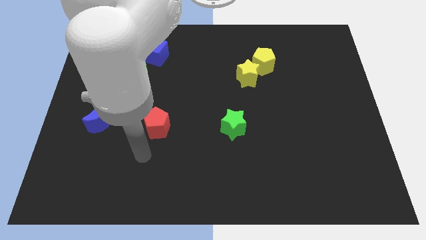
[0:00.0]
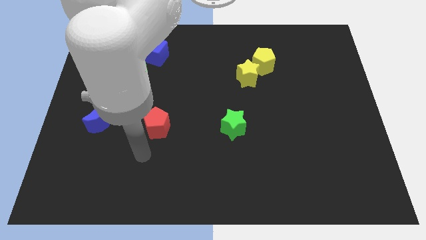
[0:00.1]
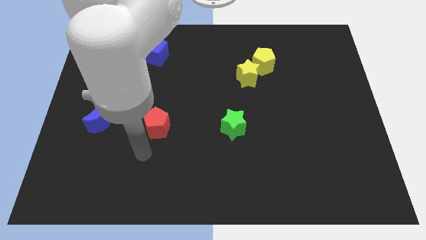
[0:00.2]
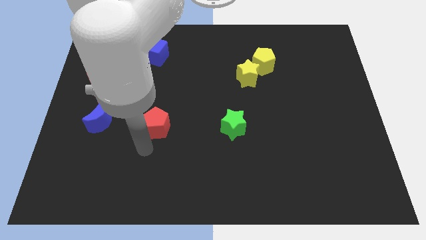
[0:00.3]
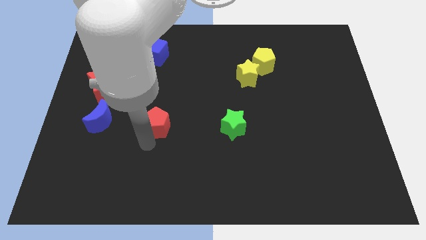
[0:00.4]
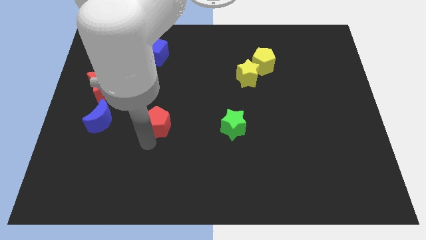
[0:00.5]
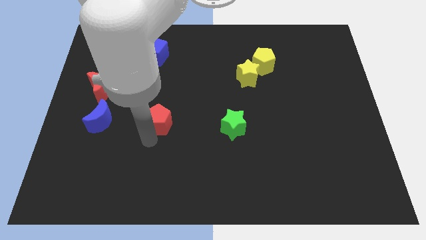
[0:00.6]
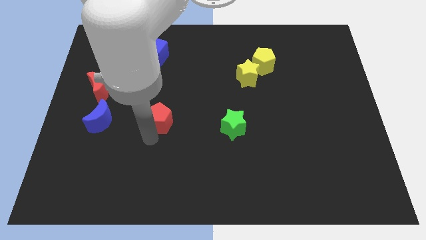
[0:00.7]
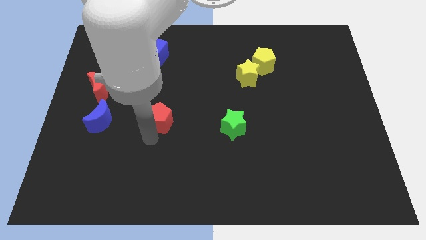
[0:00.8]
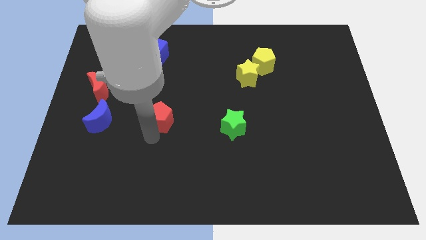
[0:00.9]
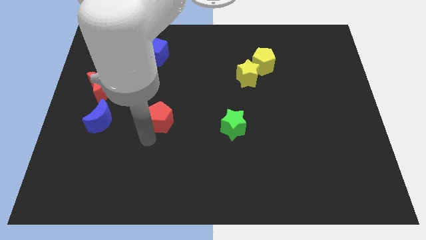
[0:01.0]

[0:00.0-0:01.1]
move the red pentagon slightly to the top

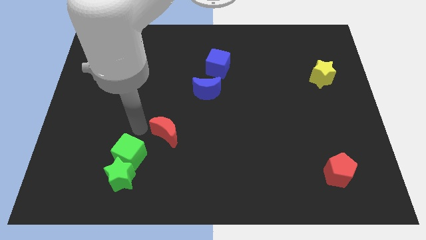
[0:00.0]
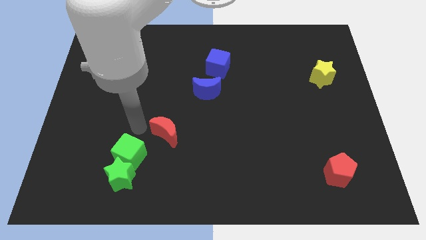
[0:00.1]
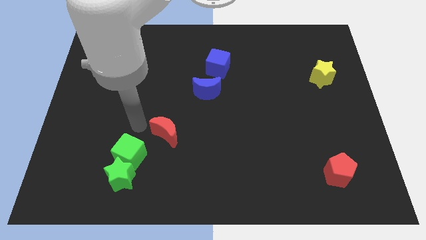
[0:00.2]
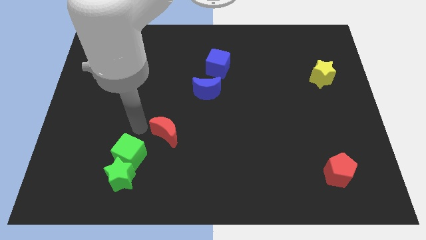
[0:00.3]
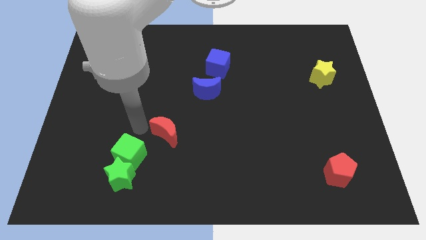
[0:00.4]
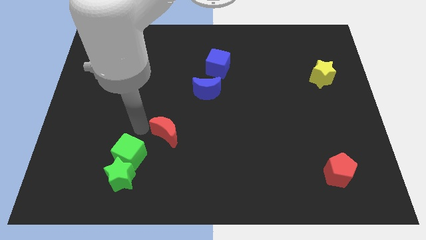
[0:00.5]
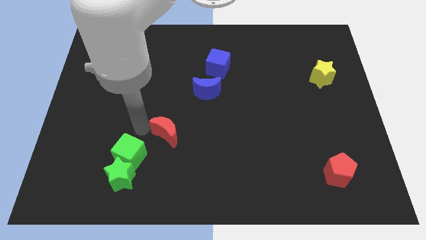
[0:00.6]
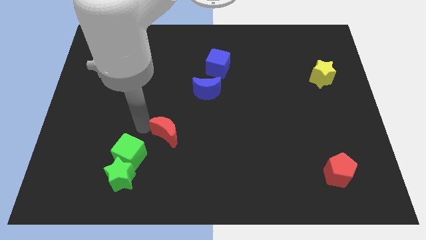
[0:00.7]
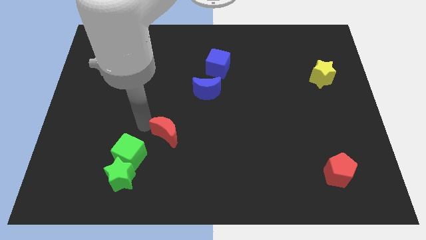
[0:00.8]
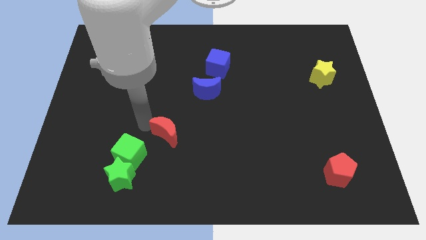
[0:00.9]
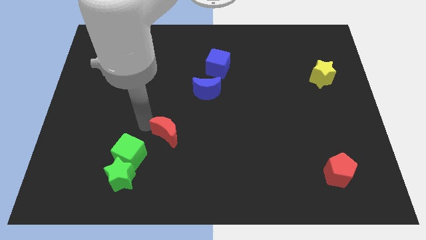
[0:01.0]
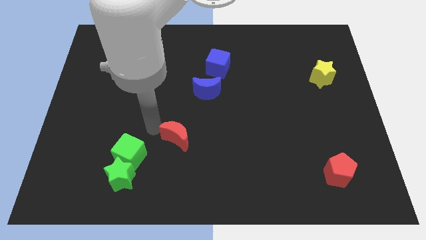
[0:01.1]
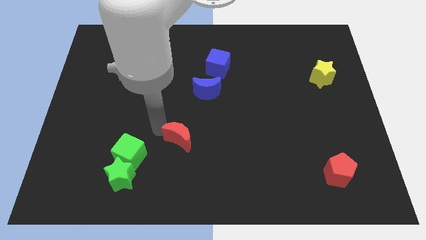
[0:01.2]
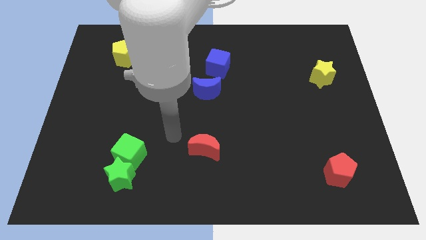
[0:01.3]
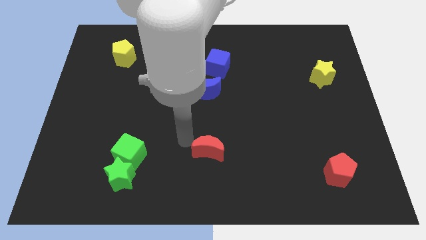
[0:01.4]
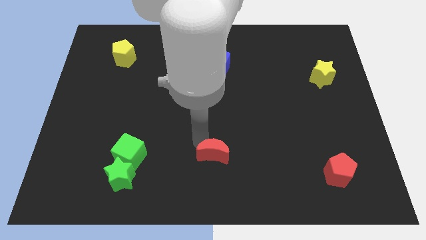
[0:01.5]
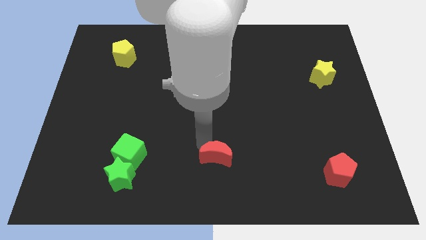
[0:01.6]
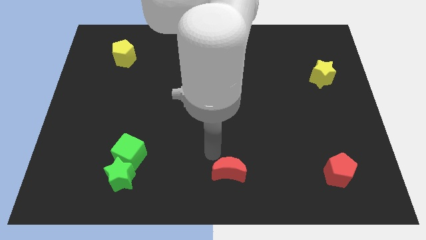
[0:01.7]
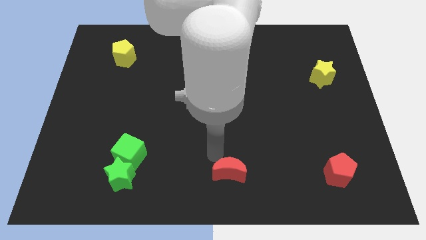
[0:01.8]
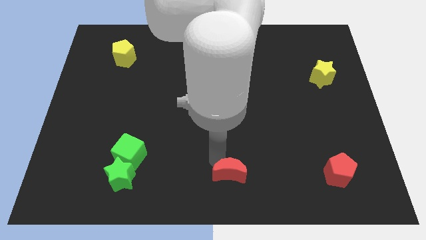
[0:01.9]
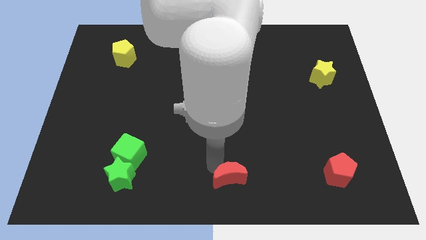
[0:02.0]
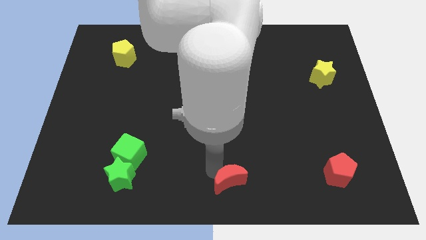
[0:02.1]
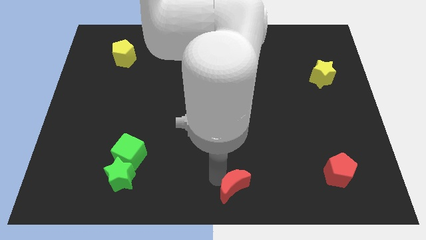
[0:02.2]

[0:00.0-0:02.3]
place red moon to the right of green star
